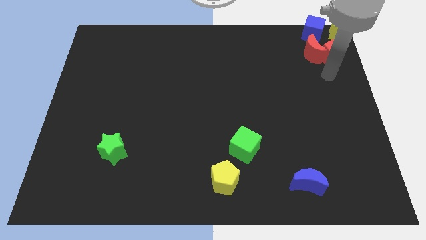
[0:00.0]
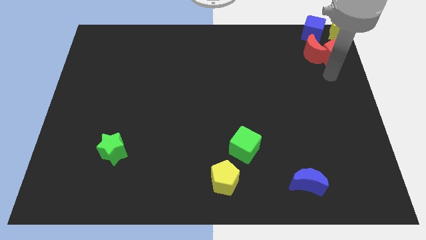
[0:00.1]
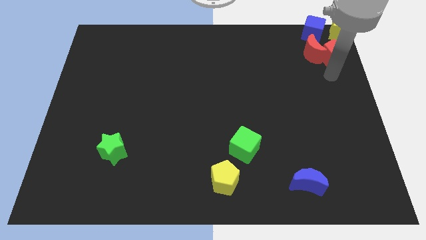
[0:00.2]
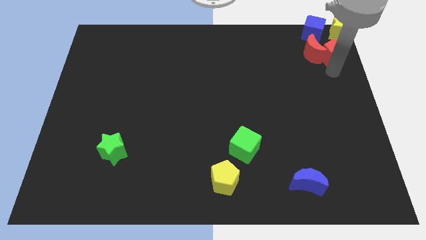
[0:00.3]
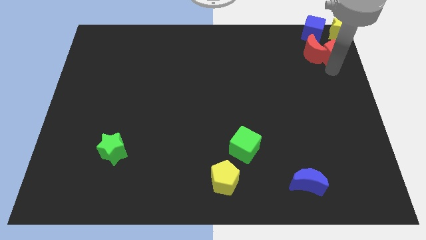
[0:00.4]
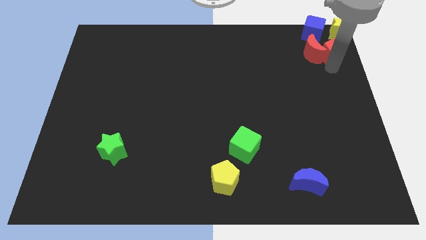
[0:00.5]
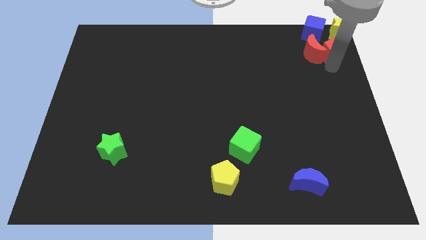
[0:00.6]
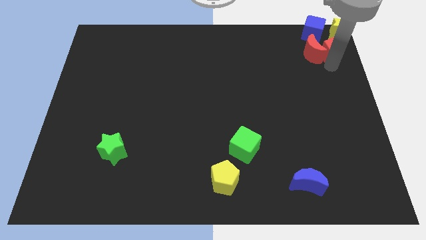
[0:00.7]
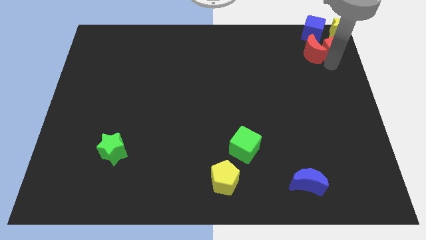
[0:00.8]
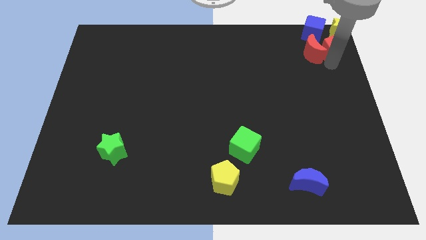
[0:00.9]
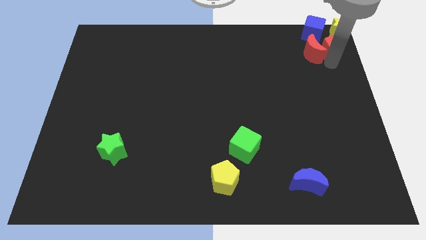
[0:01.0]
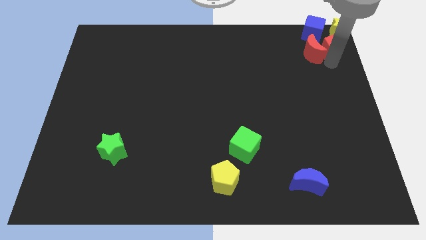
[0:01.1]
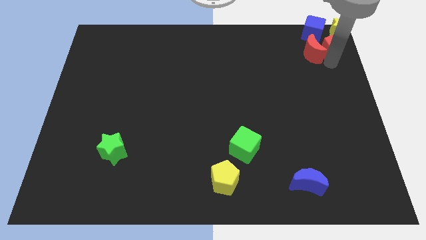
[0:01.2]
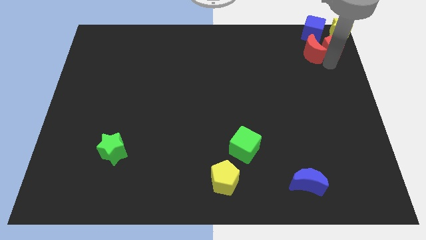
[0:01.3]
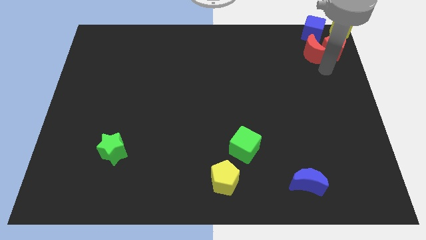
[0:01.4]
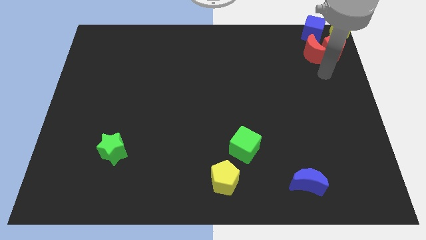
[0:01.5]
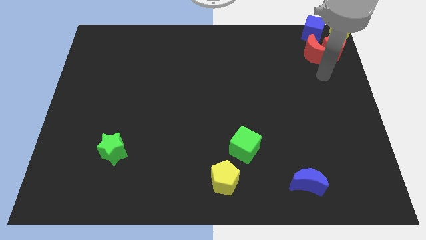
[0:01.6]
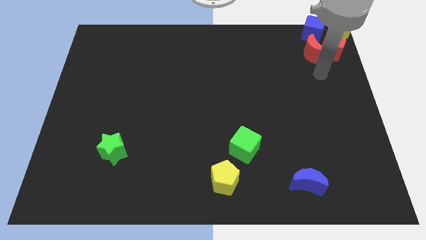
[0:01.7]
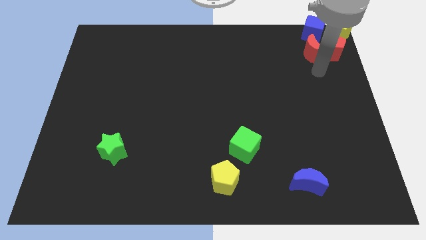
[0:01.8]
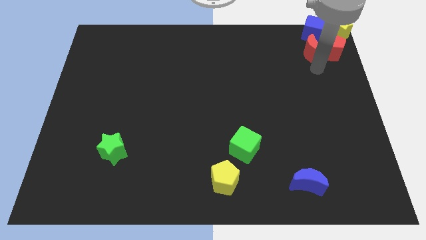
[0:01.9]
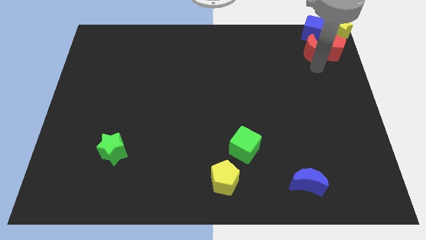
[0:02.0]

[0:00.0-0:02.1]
slightly move red pentagon

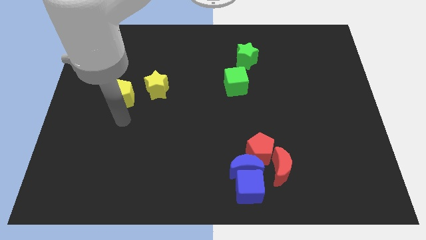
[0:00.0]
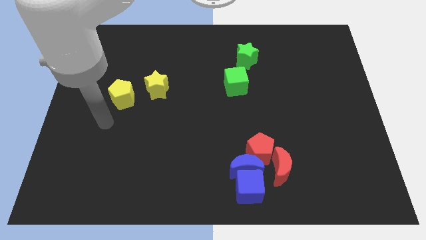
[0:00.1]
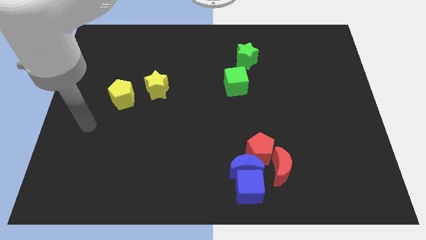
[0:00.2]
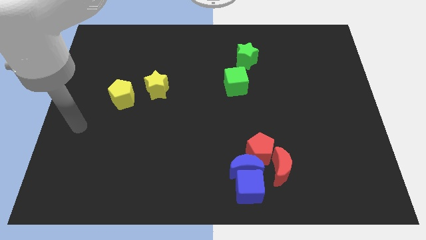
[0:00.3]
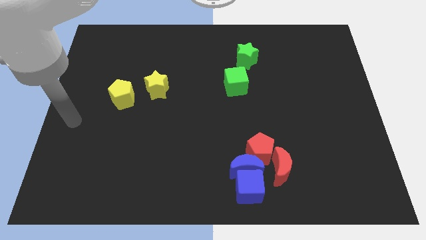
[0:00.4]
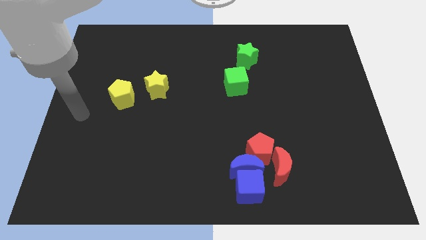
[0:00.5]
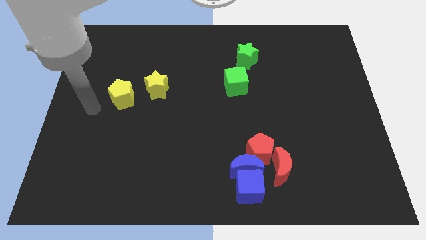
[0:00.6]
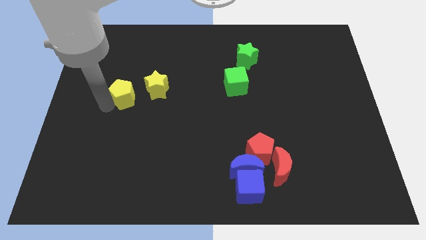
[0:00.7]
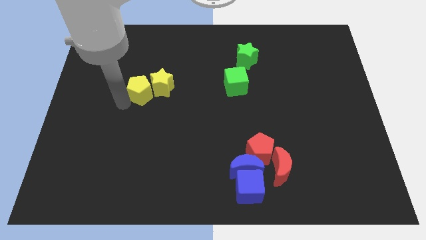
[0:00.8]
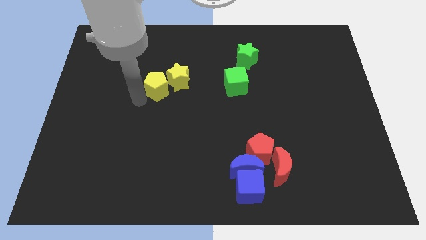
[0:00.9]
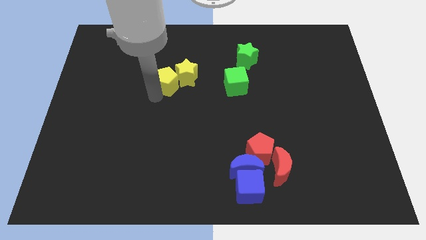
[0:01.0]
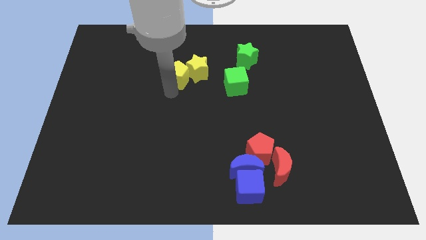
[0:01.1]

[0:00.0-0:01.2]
slide both the yellow blocks to the left side of the green cube

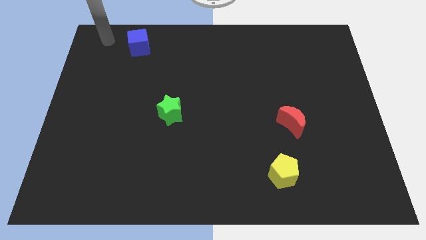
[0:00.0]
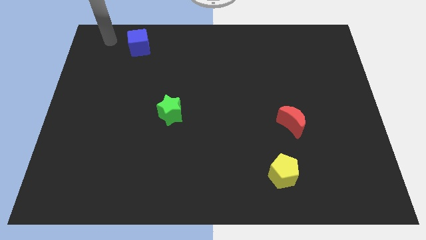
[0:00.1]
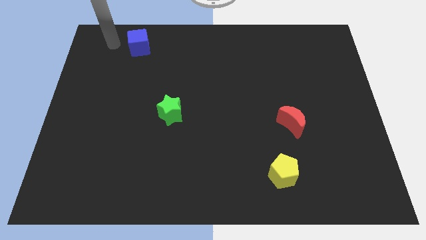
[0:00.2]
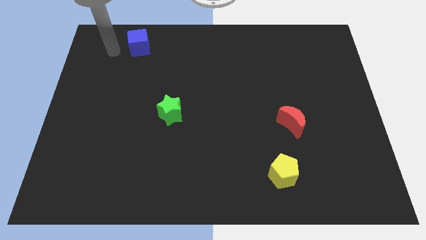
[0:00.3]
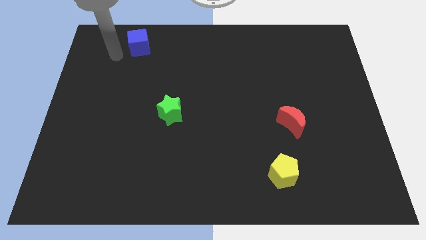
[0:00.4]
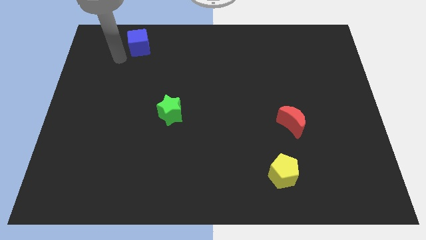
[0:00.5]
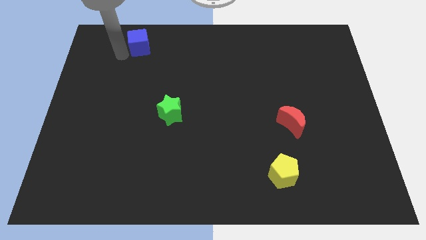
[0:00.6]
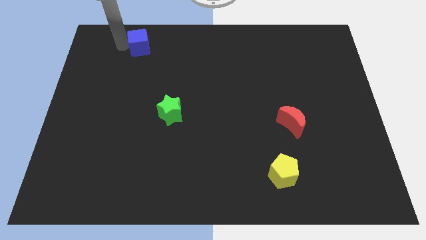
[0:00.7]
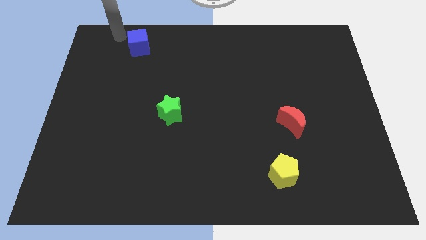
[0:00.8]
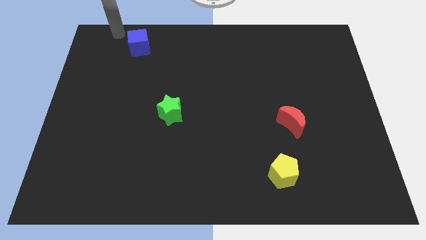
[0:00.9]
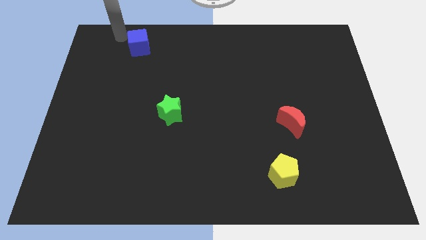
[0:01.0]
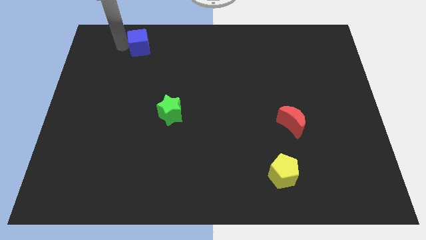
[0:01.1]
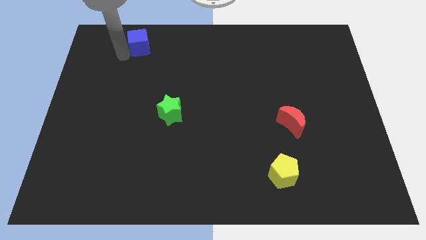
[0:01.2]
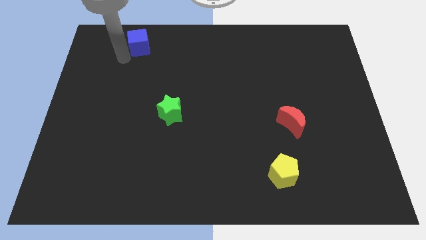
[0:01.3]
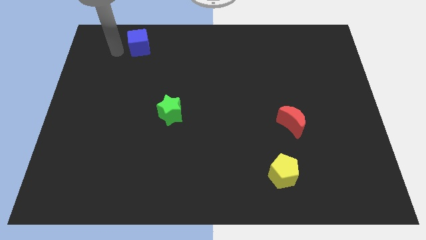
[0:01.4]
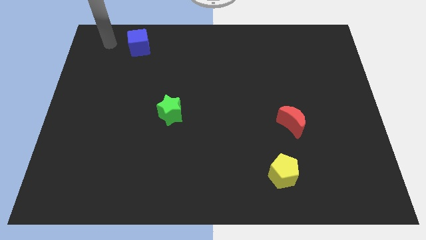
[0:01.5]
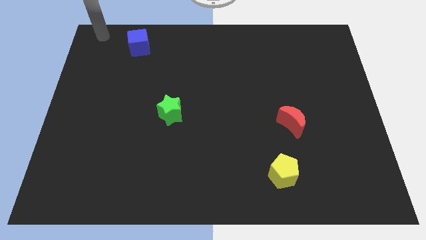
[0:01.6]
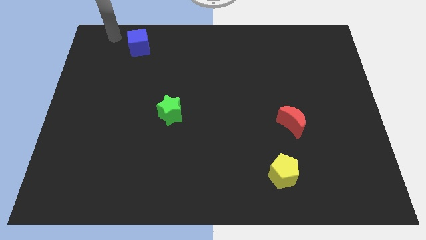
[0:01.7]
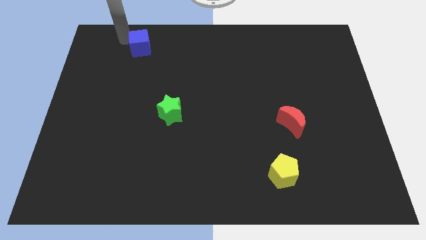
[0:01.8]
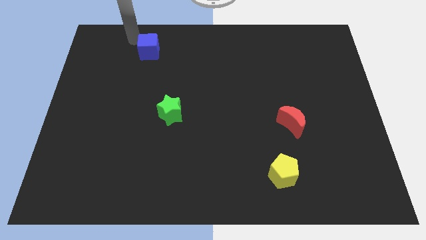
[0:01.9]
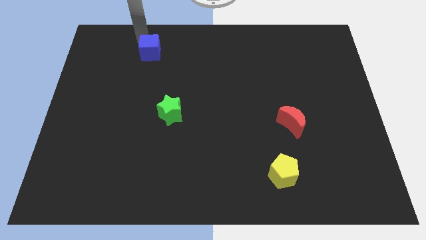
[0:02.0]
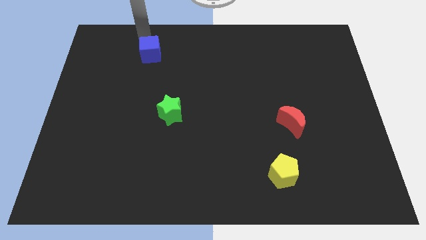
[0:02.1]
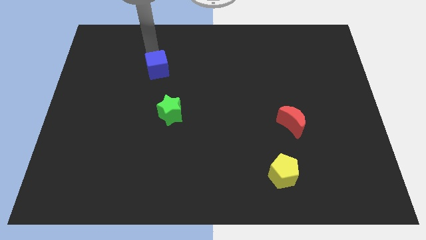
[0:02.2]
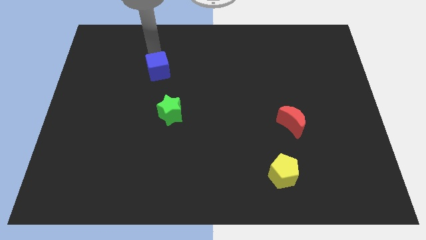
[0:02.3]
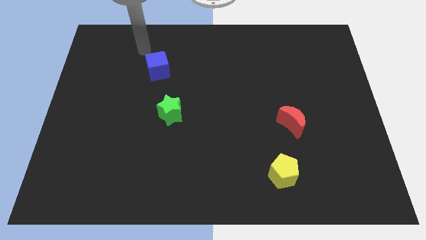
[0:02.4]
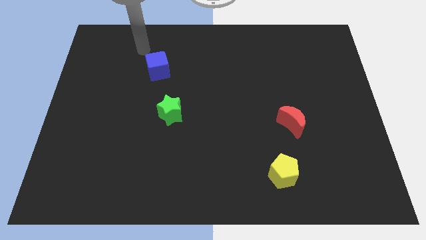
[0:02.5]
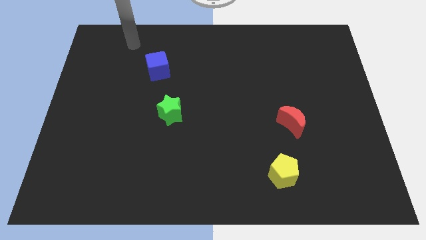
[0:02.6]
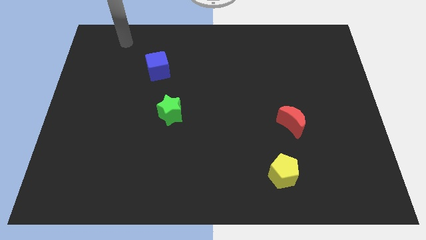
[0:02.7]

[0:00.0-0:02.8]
push the blue cube towards the green star

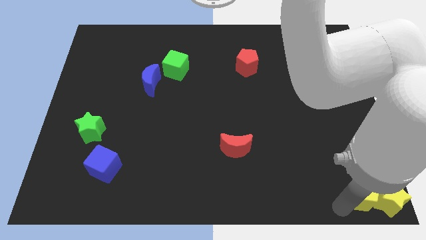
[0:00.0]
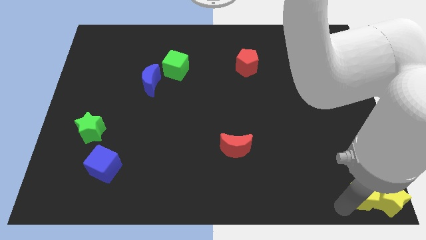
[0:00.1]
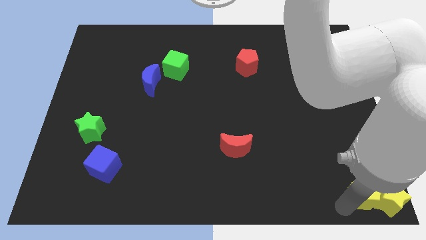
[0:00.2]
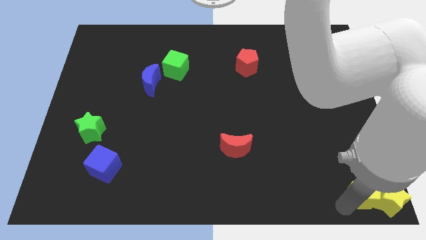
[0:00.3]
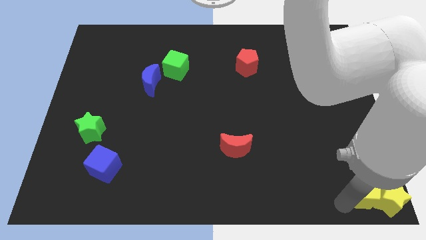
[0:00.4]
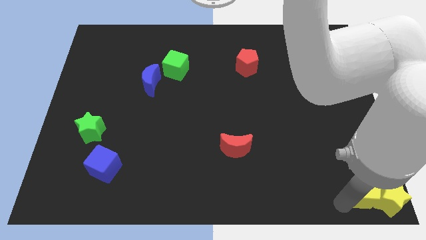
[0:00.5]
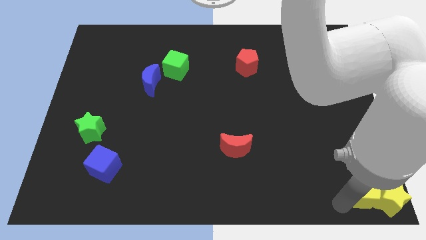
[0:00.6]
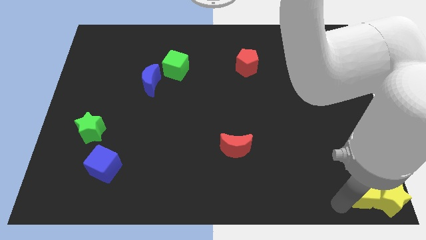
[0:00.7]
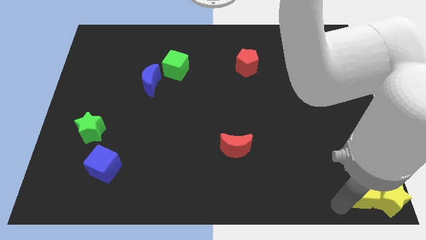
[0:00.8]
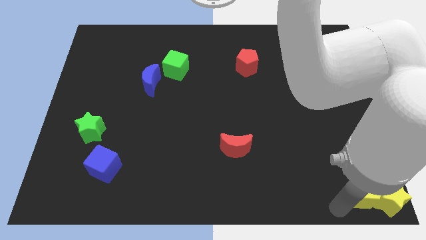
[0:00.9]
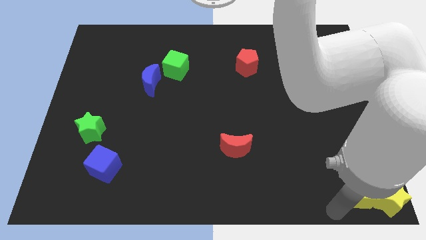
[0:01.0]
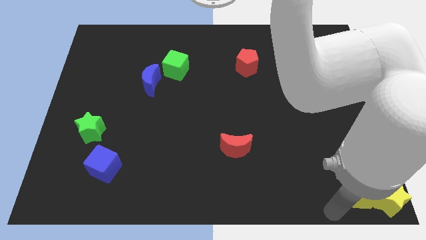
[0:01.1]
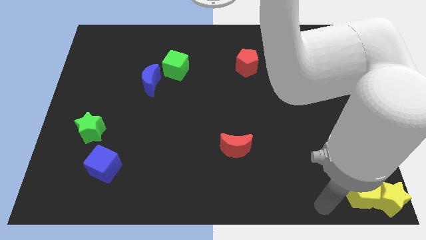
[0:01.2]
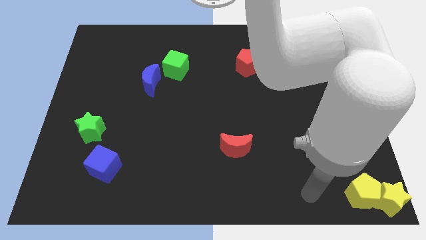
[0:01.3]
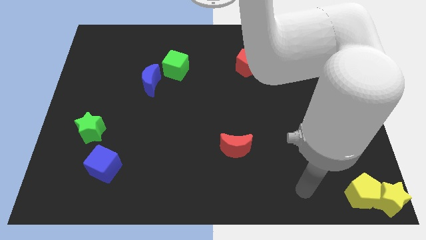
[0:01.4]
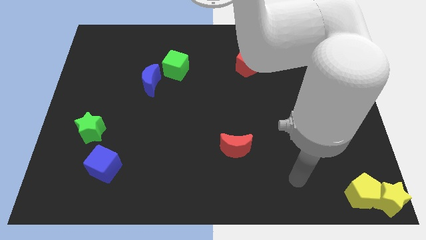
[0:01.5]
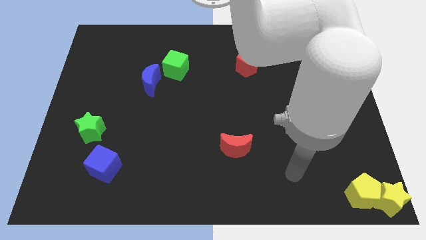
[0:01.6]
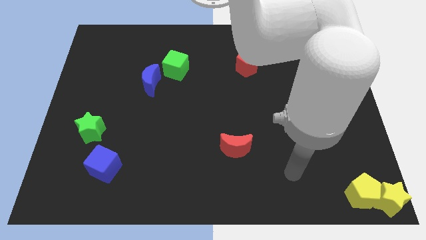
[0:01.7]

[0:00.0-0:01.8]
push the yellow pentagon towards the yellow star

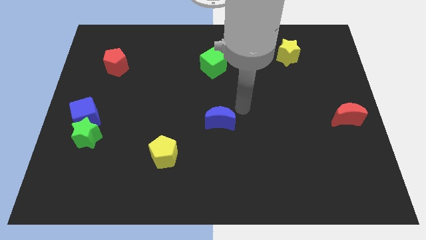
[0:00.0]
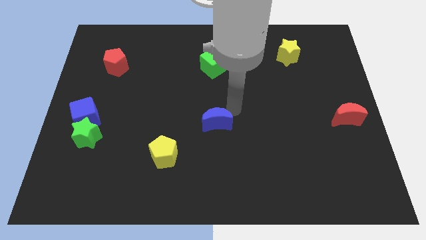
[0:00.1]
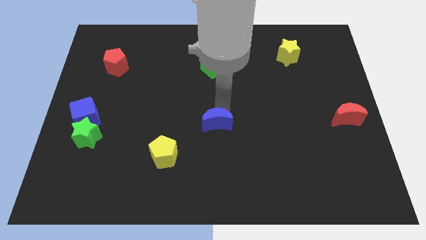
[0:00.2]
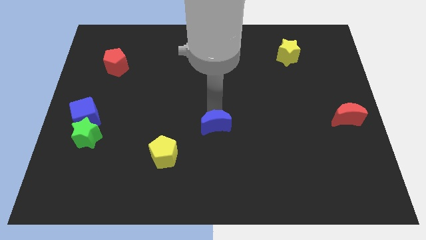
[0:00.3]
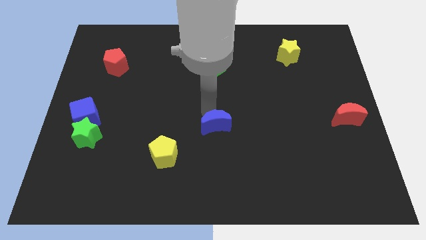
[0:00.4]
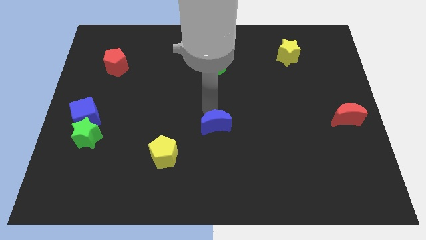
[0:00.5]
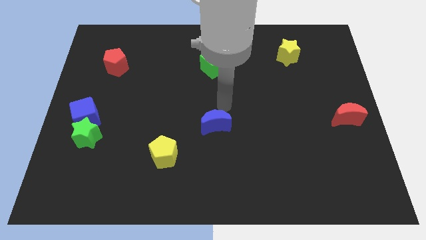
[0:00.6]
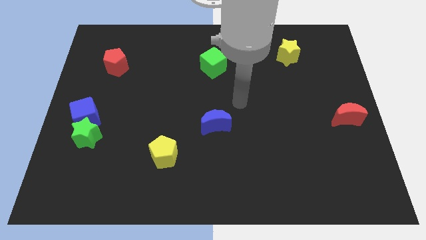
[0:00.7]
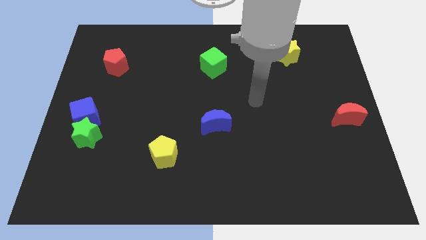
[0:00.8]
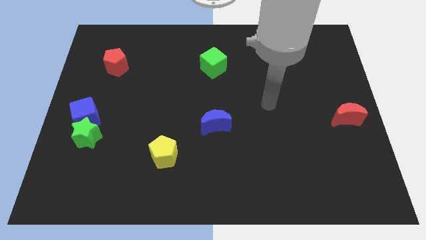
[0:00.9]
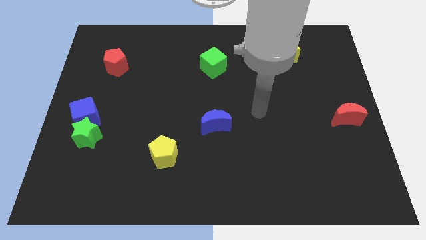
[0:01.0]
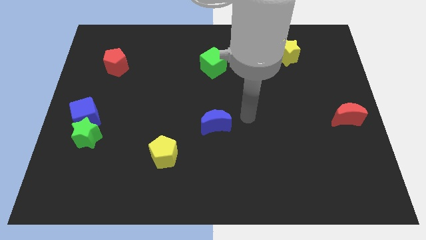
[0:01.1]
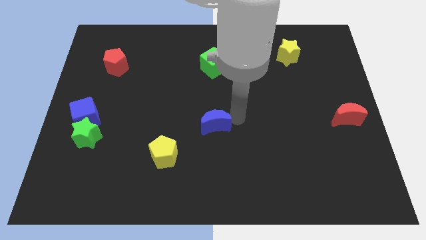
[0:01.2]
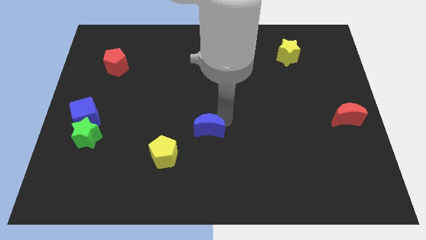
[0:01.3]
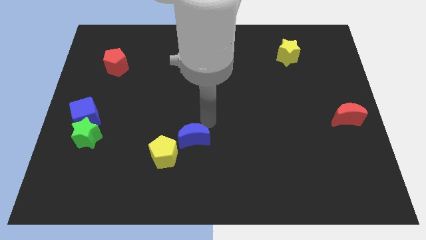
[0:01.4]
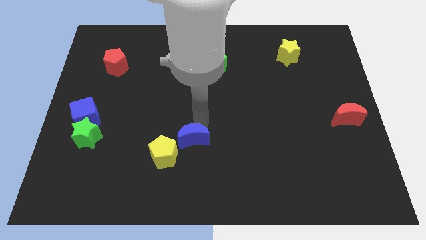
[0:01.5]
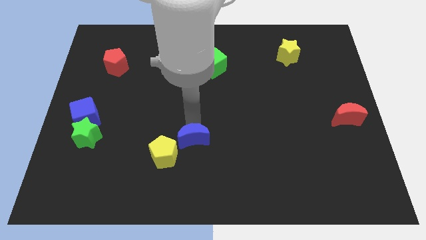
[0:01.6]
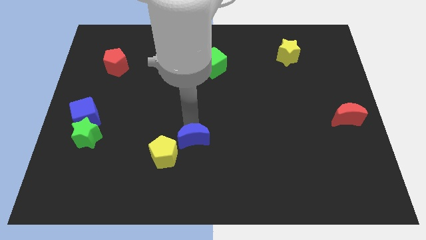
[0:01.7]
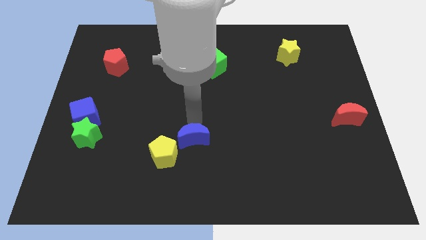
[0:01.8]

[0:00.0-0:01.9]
place the blue moon close to the yellow pentagon
